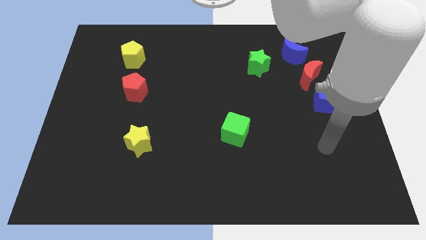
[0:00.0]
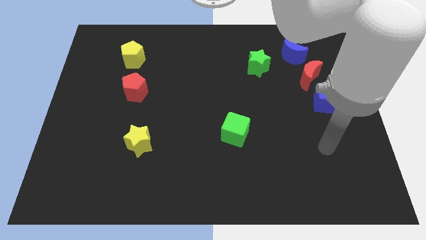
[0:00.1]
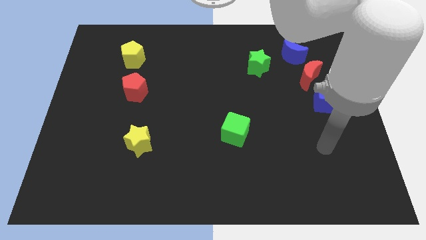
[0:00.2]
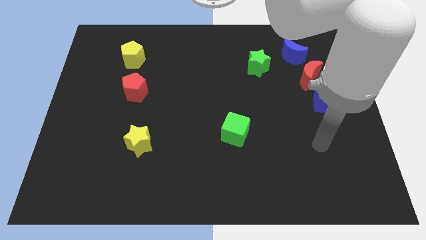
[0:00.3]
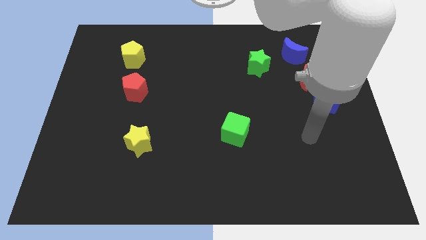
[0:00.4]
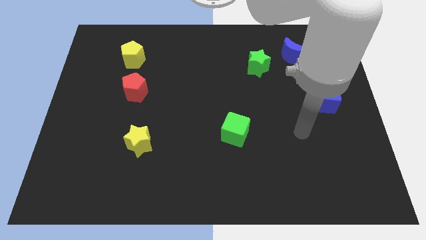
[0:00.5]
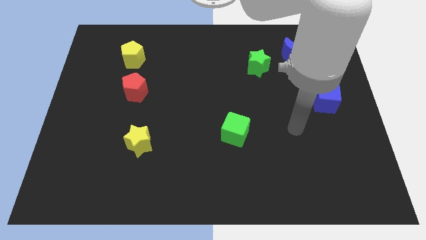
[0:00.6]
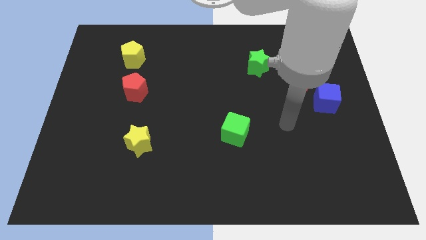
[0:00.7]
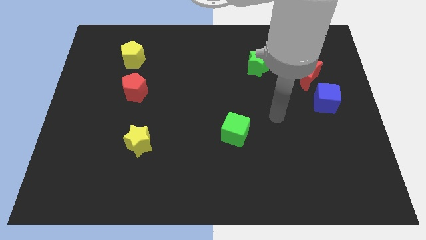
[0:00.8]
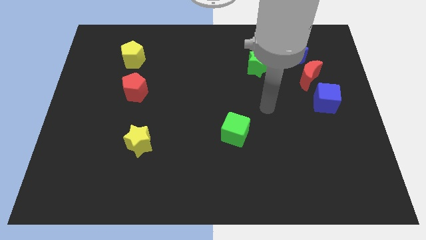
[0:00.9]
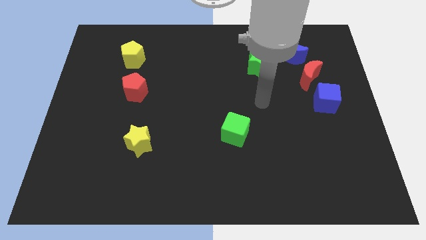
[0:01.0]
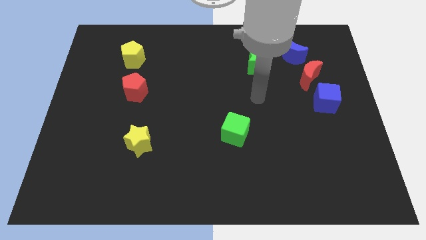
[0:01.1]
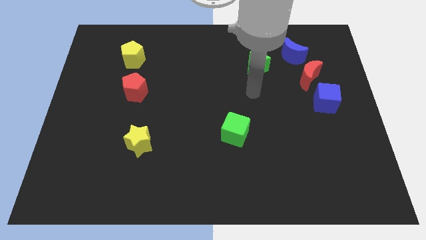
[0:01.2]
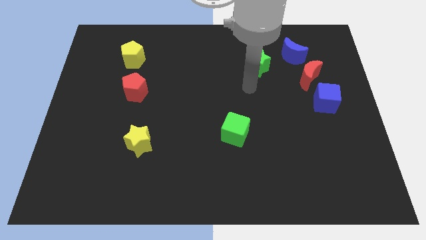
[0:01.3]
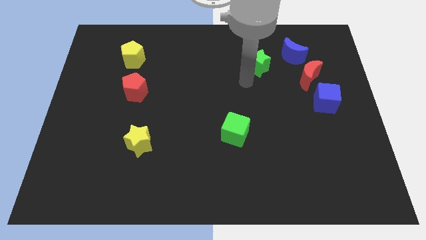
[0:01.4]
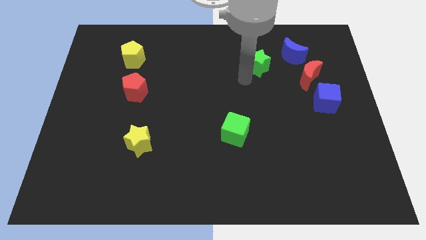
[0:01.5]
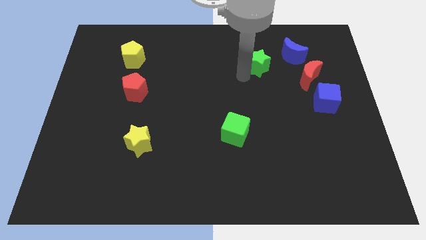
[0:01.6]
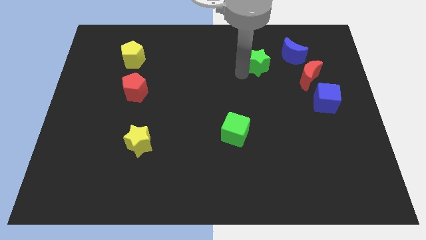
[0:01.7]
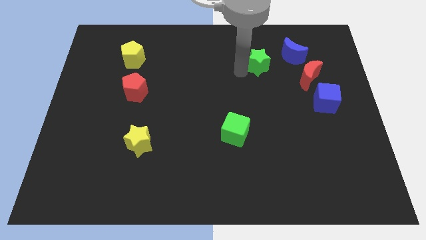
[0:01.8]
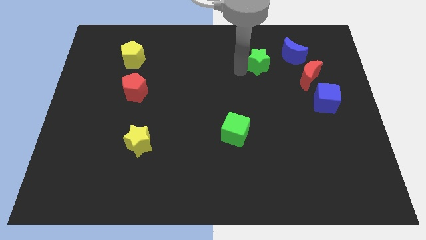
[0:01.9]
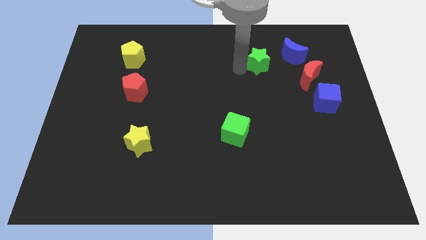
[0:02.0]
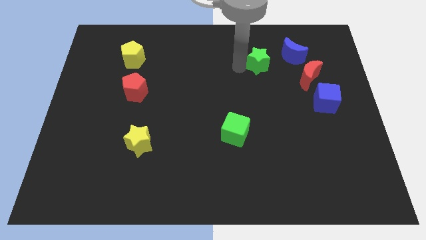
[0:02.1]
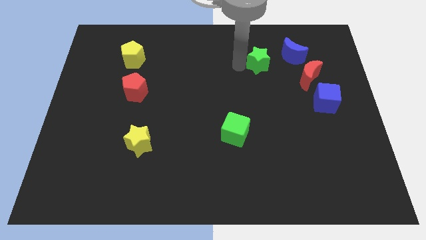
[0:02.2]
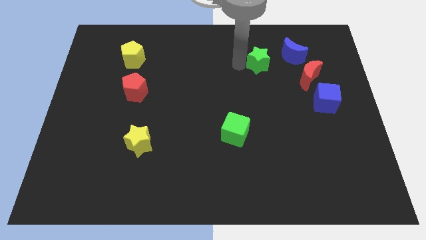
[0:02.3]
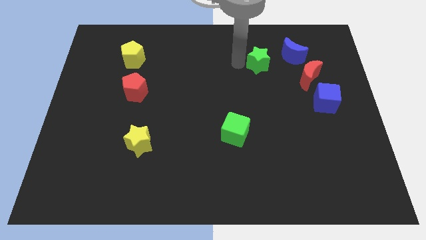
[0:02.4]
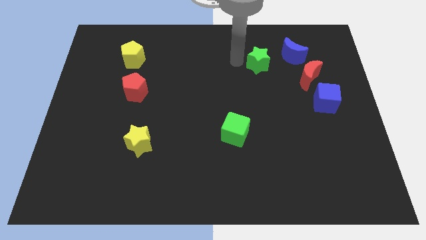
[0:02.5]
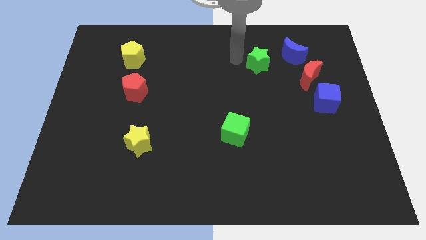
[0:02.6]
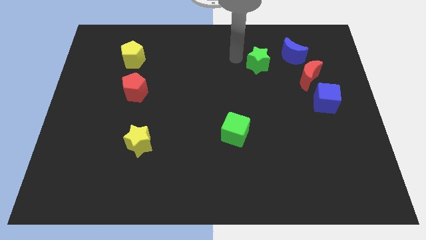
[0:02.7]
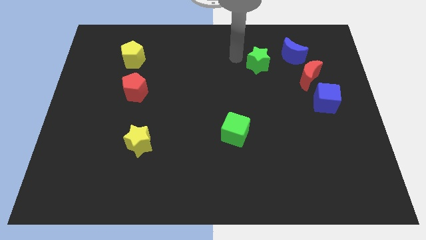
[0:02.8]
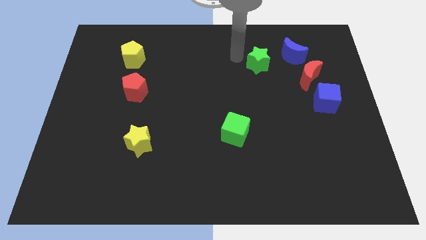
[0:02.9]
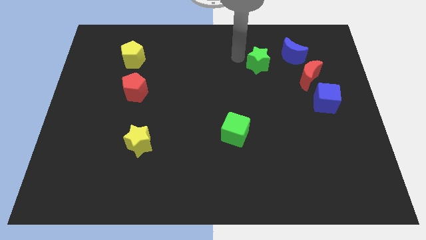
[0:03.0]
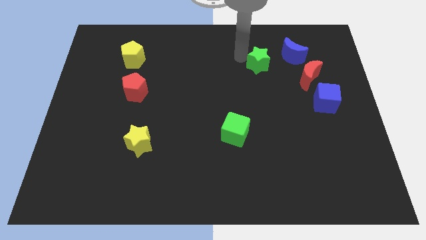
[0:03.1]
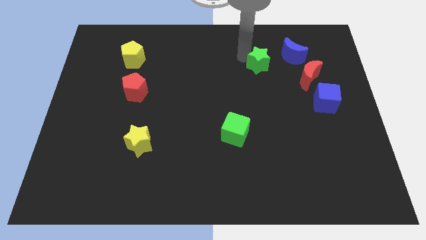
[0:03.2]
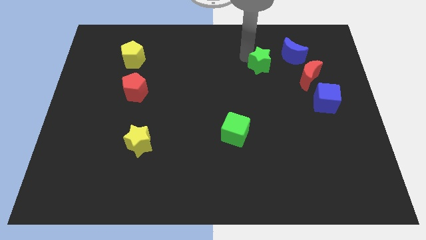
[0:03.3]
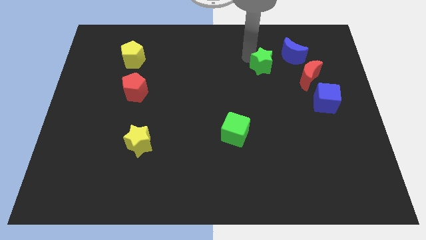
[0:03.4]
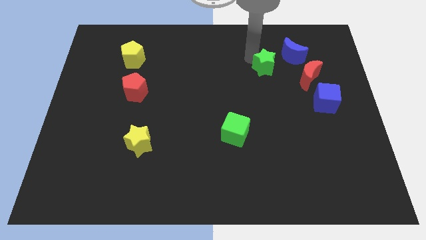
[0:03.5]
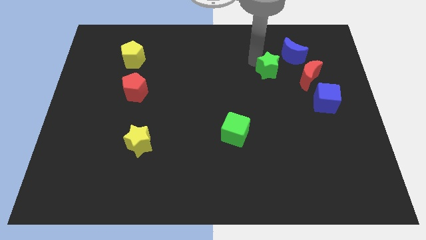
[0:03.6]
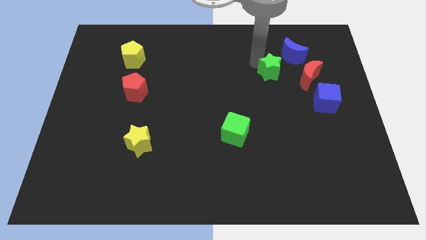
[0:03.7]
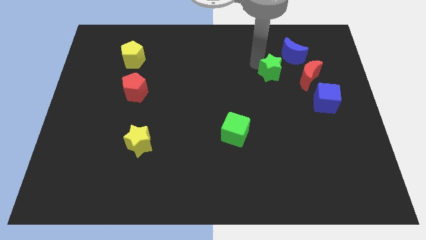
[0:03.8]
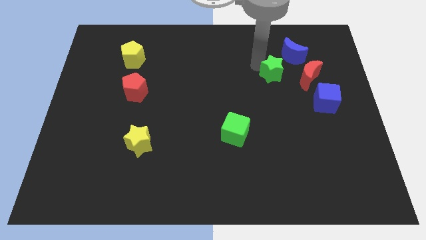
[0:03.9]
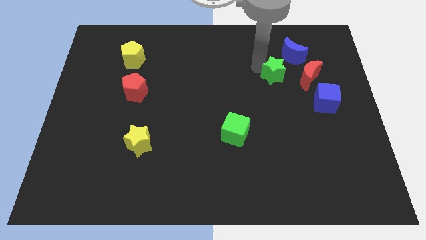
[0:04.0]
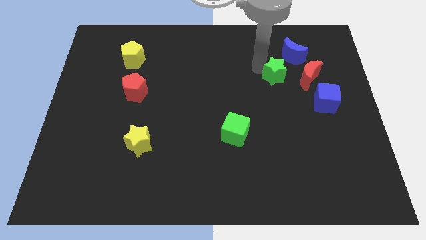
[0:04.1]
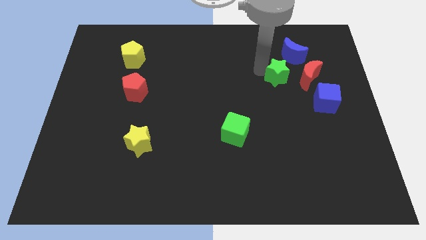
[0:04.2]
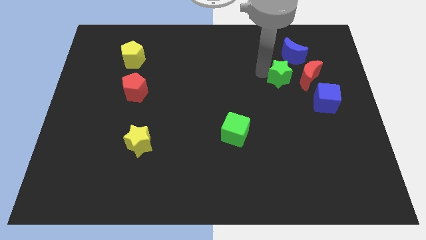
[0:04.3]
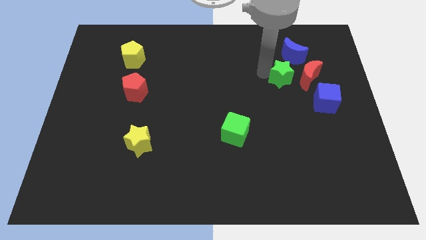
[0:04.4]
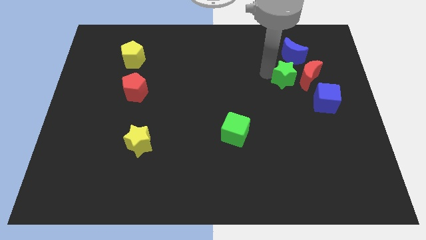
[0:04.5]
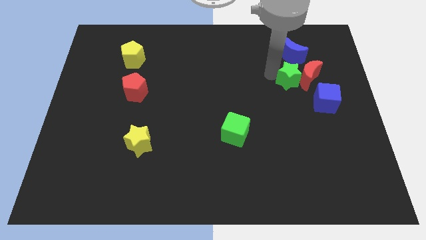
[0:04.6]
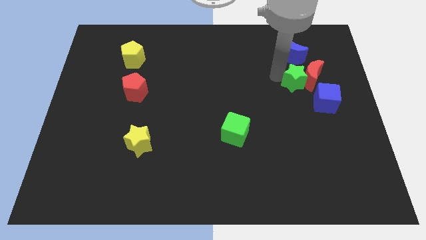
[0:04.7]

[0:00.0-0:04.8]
push the green star to the red moon

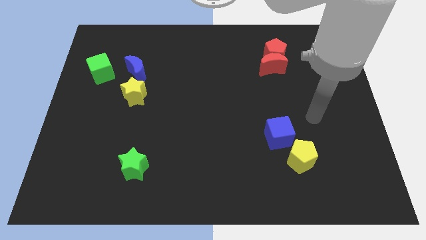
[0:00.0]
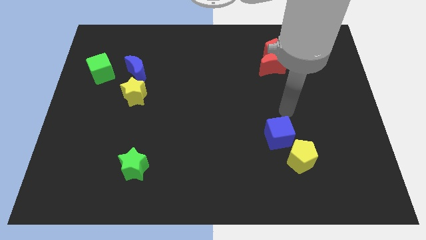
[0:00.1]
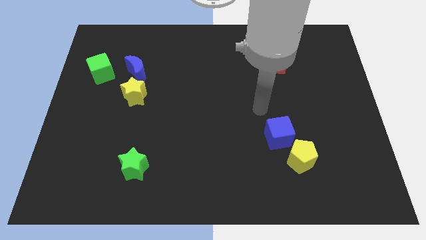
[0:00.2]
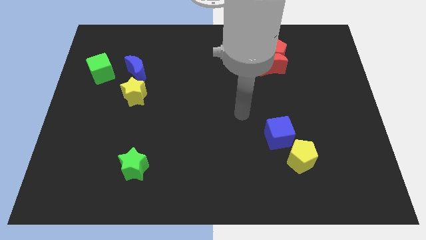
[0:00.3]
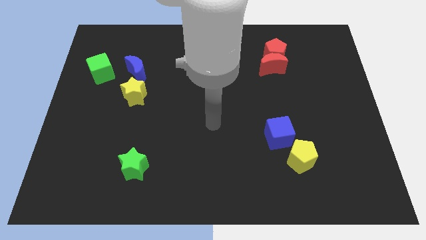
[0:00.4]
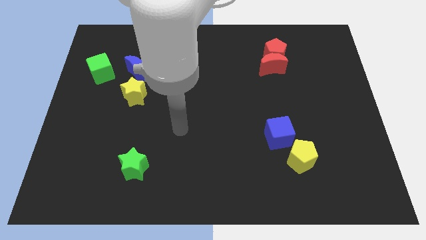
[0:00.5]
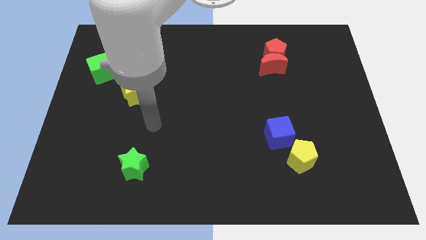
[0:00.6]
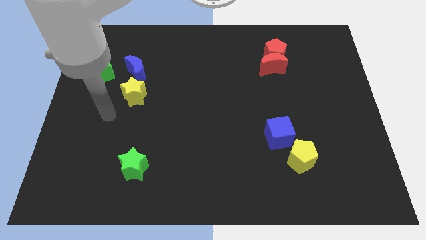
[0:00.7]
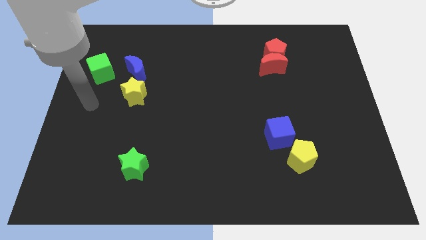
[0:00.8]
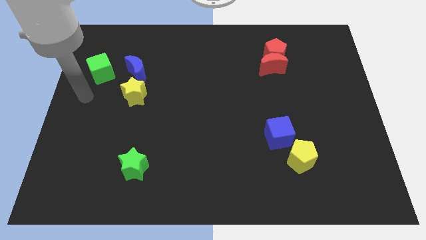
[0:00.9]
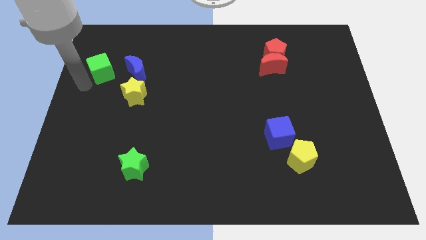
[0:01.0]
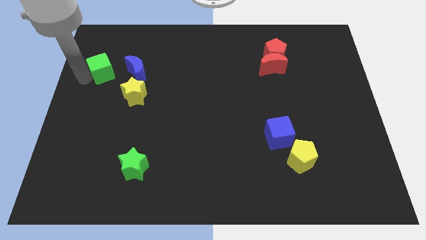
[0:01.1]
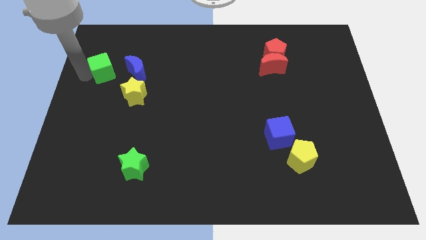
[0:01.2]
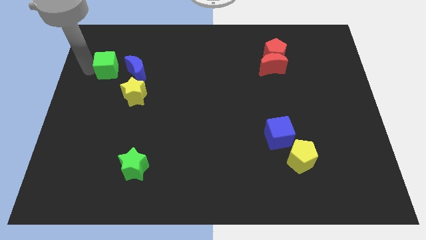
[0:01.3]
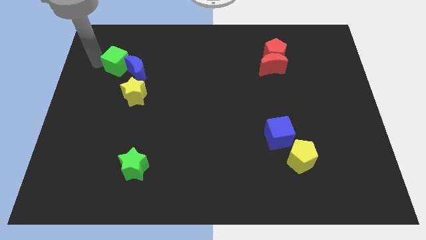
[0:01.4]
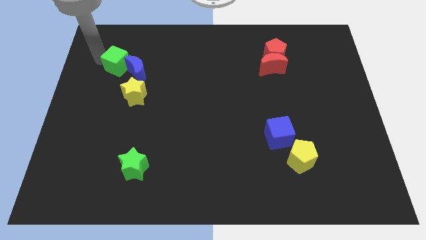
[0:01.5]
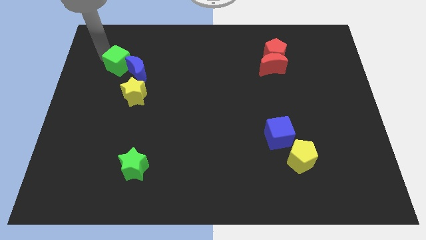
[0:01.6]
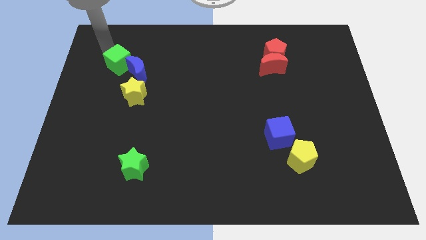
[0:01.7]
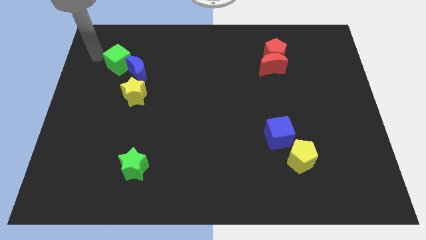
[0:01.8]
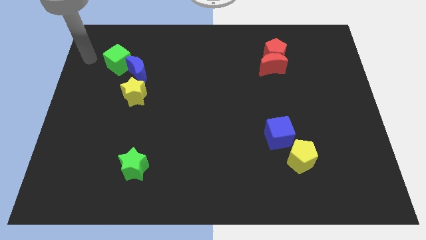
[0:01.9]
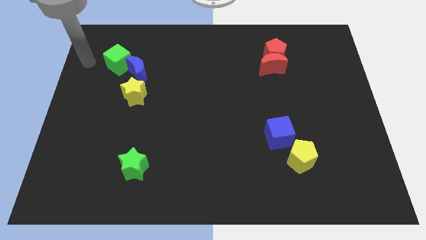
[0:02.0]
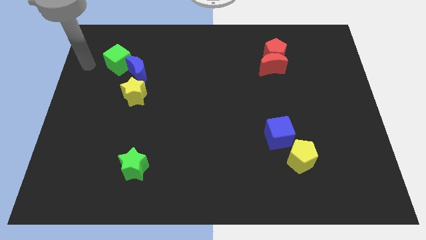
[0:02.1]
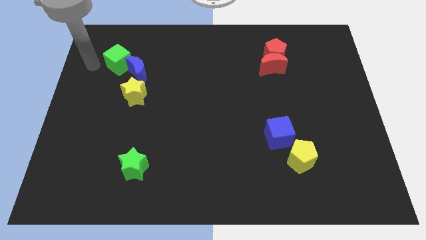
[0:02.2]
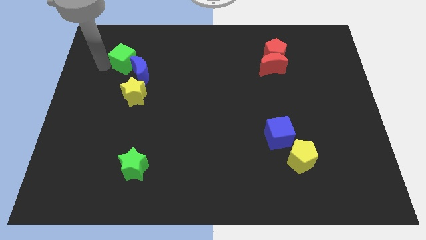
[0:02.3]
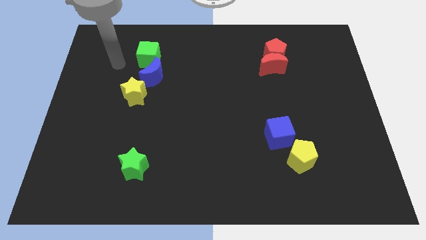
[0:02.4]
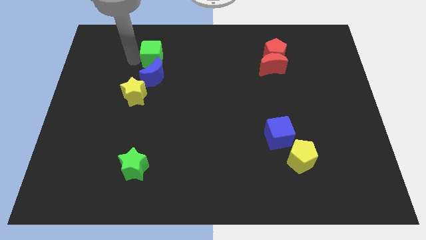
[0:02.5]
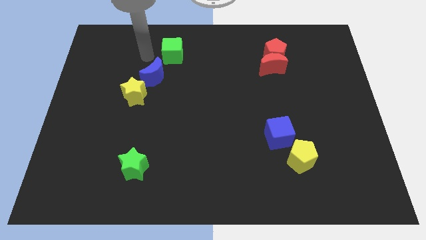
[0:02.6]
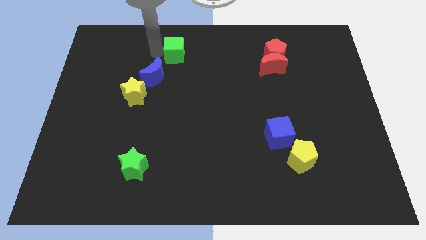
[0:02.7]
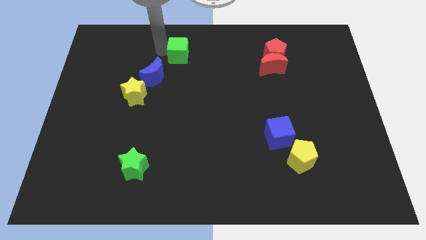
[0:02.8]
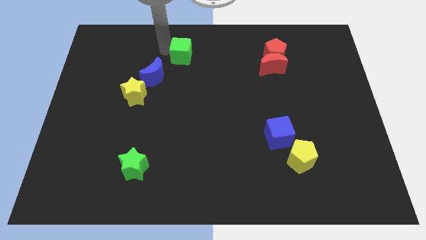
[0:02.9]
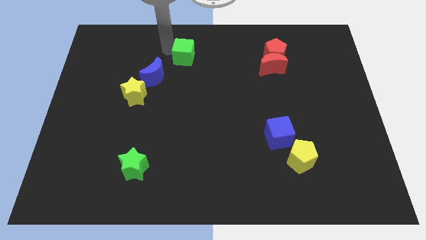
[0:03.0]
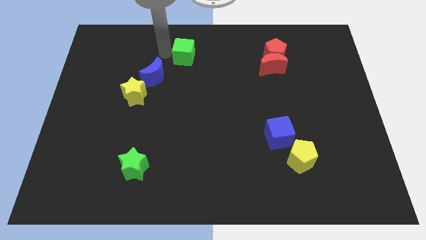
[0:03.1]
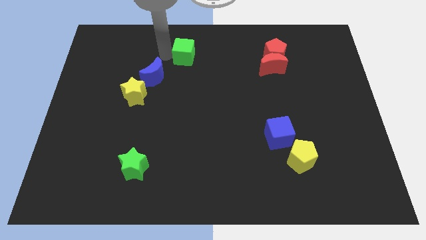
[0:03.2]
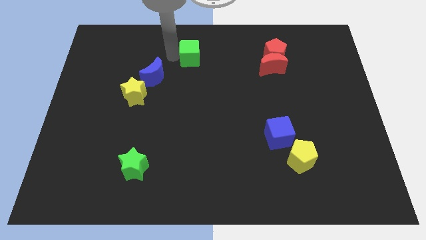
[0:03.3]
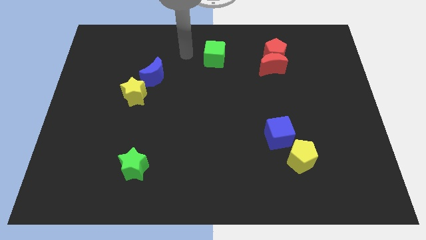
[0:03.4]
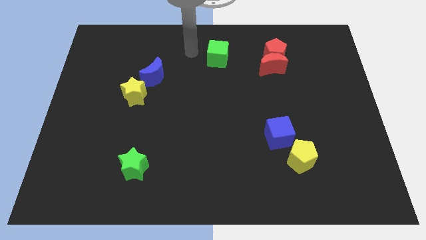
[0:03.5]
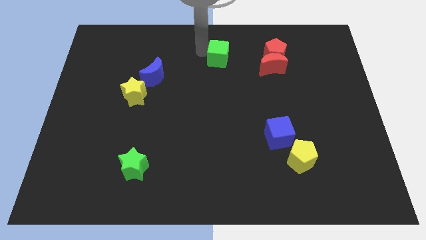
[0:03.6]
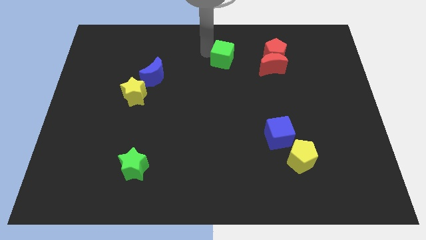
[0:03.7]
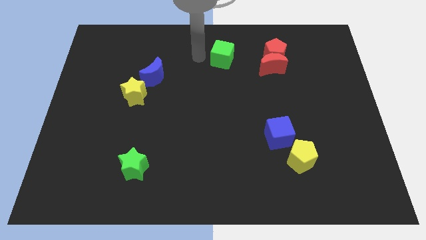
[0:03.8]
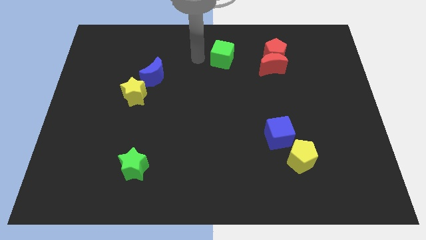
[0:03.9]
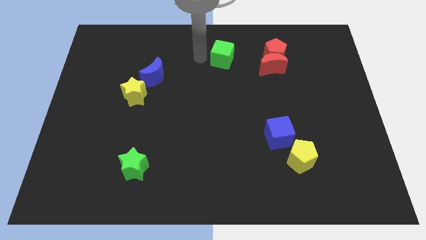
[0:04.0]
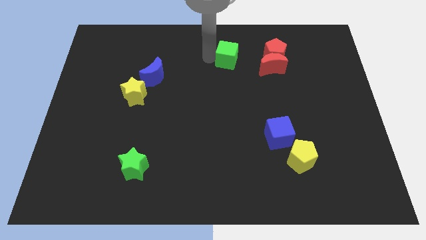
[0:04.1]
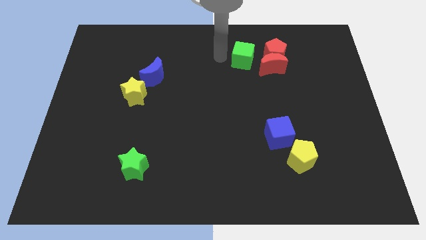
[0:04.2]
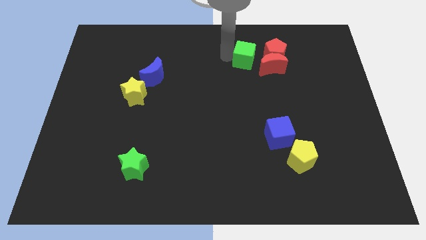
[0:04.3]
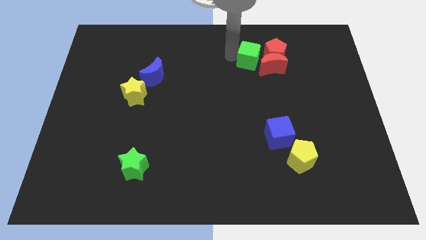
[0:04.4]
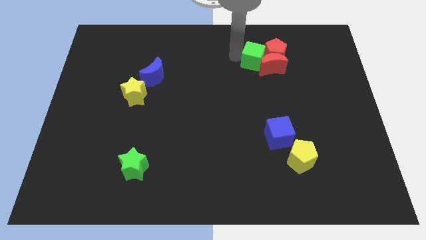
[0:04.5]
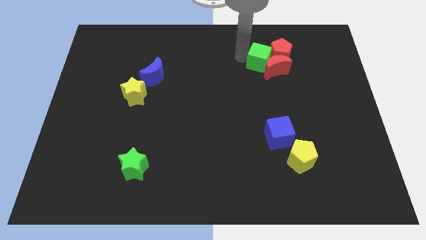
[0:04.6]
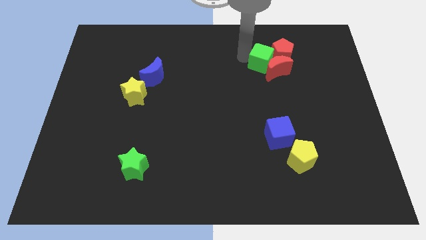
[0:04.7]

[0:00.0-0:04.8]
push the green cube next to the red pentagon
